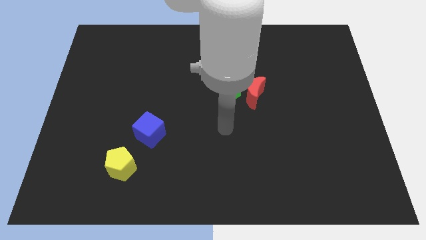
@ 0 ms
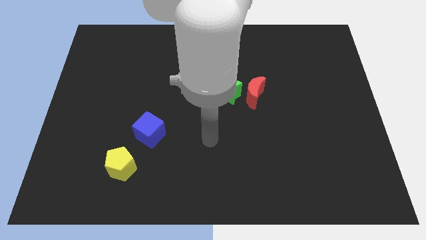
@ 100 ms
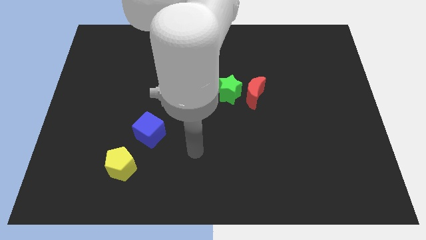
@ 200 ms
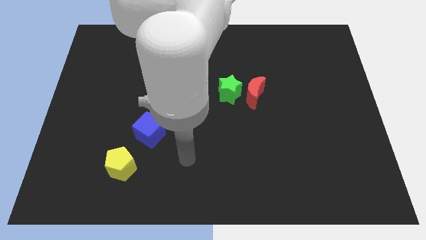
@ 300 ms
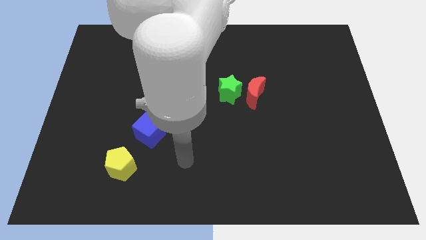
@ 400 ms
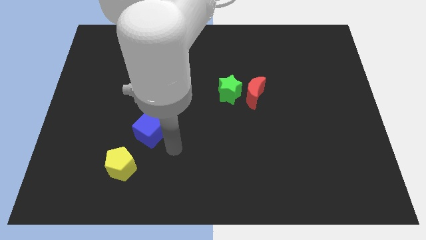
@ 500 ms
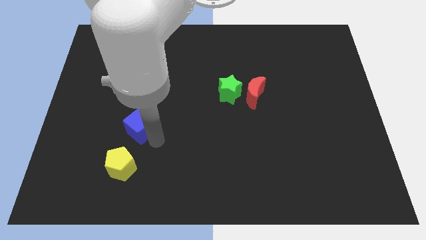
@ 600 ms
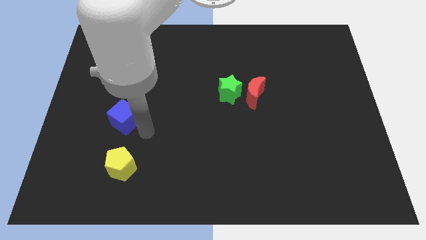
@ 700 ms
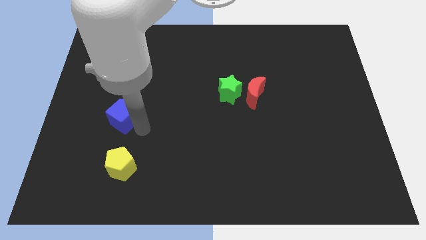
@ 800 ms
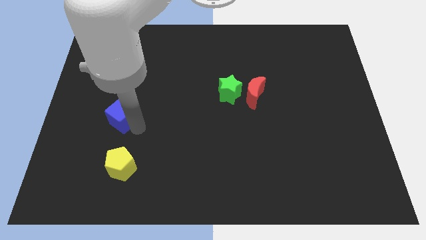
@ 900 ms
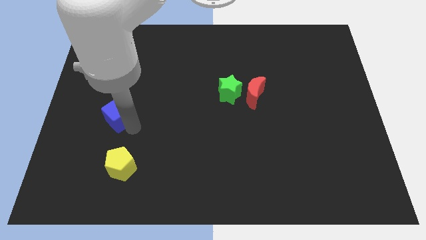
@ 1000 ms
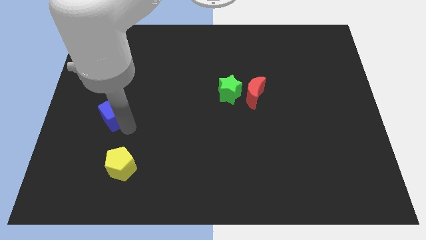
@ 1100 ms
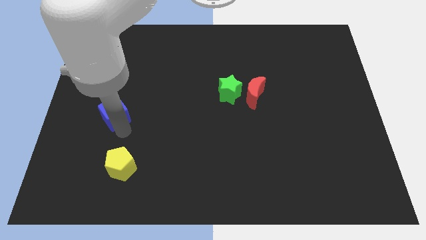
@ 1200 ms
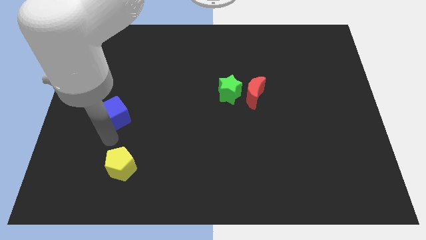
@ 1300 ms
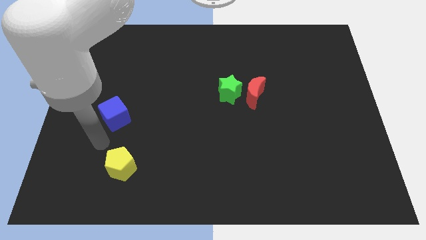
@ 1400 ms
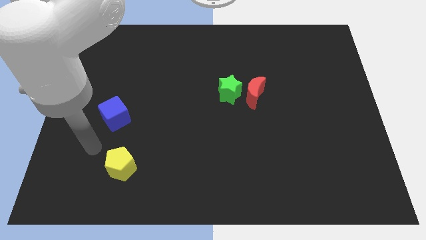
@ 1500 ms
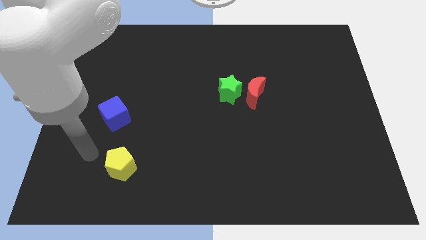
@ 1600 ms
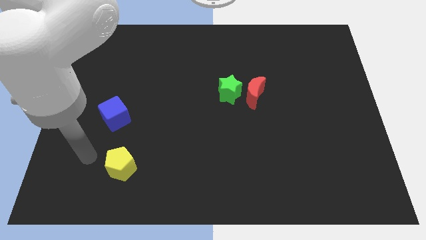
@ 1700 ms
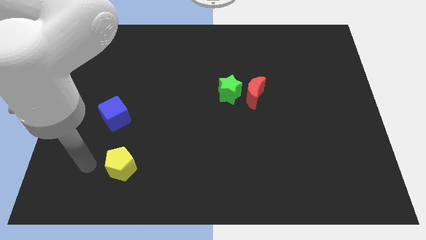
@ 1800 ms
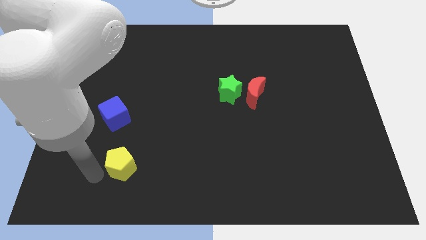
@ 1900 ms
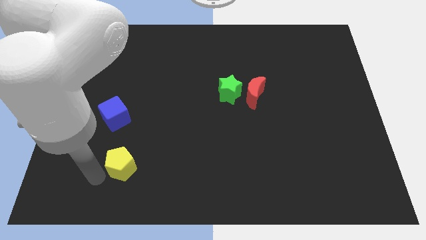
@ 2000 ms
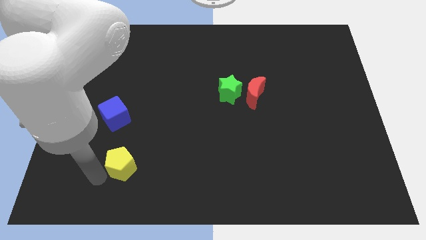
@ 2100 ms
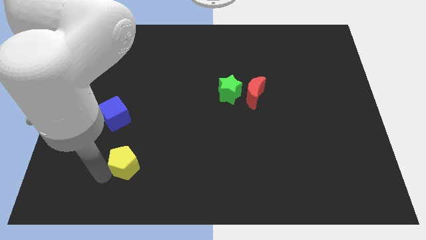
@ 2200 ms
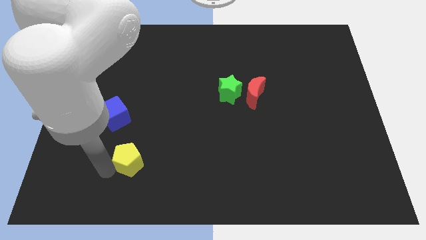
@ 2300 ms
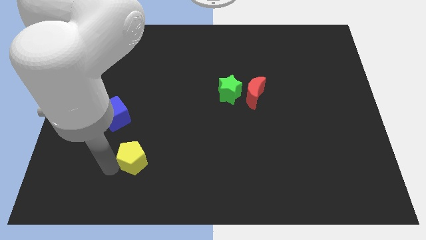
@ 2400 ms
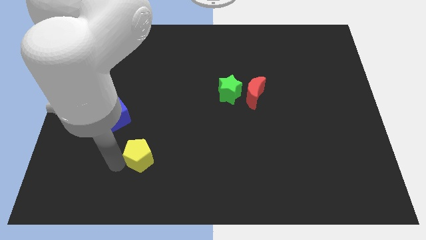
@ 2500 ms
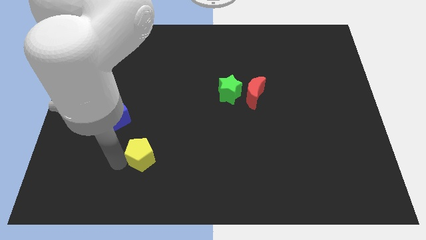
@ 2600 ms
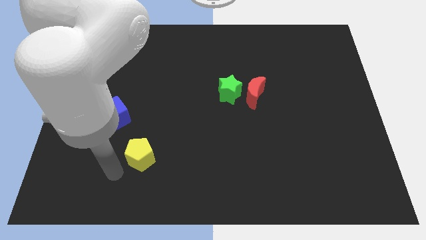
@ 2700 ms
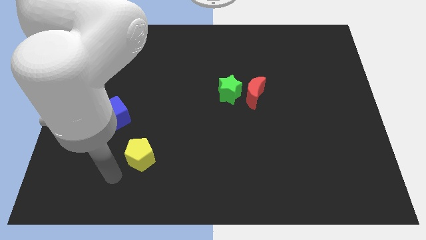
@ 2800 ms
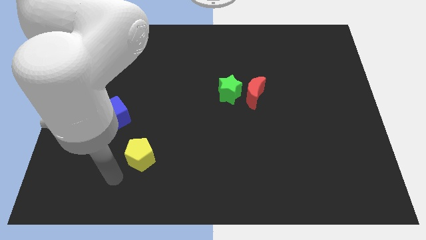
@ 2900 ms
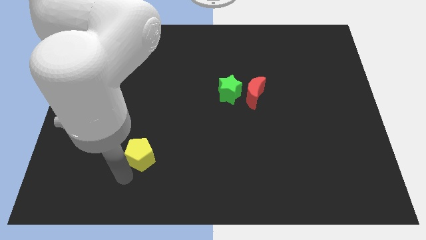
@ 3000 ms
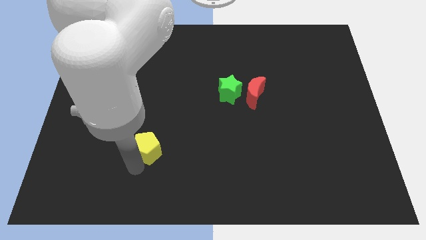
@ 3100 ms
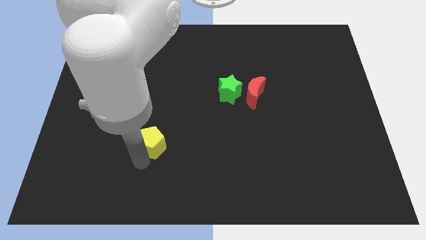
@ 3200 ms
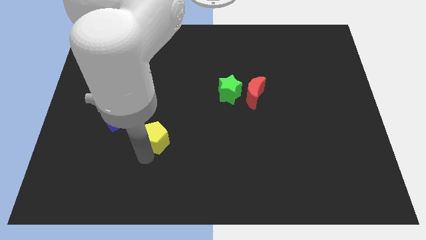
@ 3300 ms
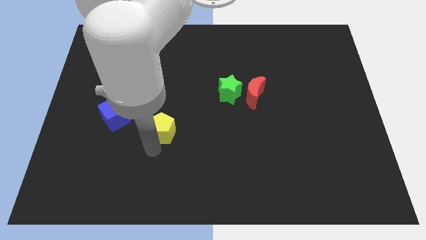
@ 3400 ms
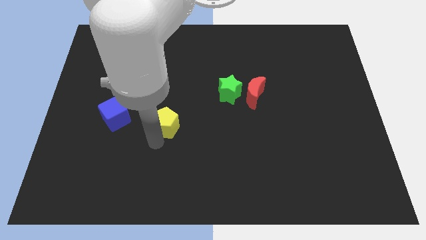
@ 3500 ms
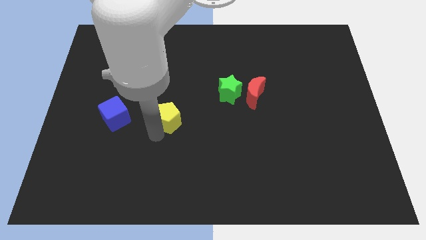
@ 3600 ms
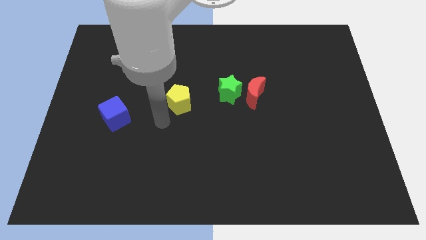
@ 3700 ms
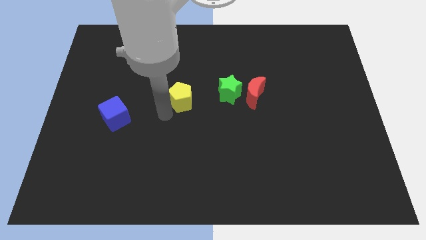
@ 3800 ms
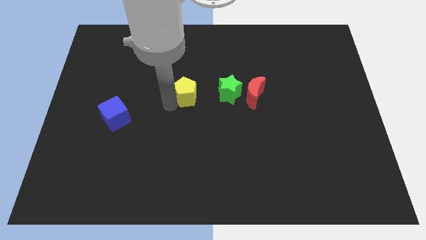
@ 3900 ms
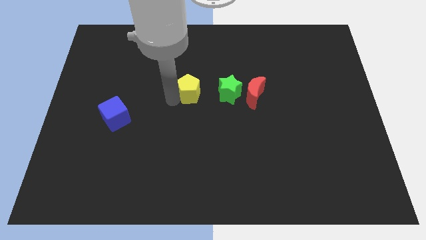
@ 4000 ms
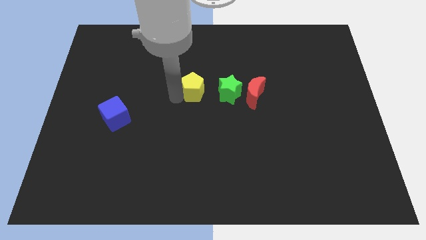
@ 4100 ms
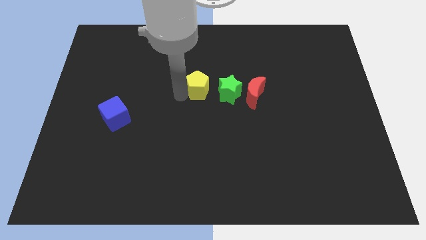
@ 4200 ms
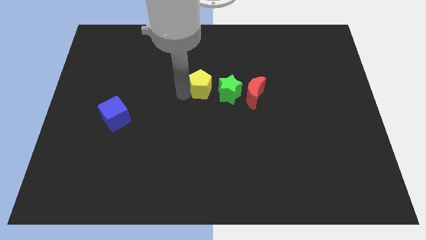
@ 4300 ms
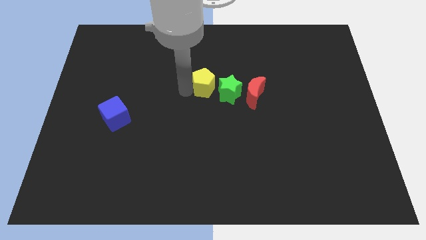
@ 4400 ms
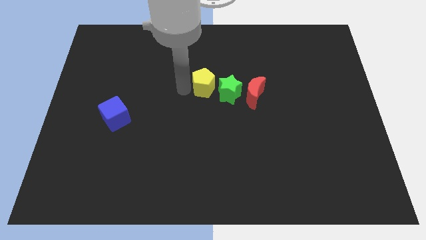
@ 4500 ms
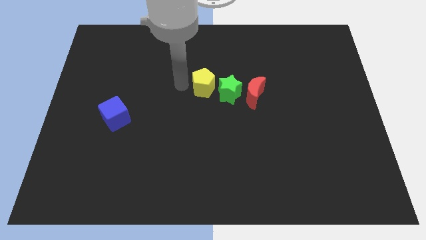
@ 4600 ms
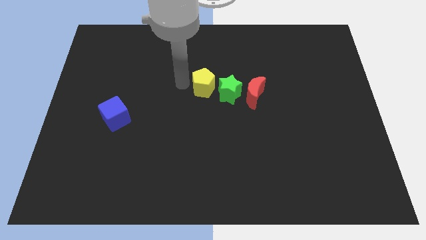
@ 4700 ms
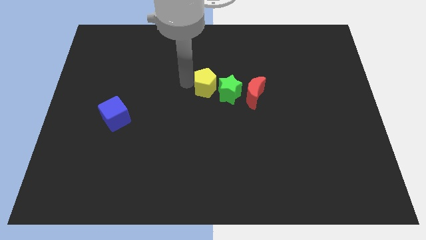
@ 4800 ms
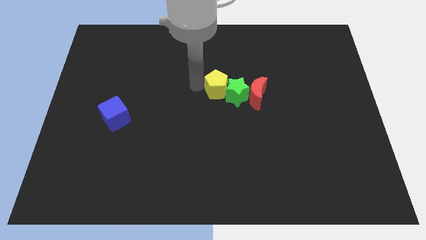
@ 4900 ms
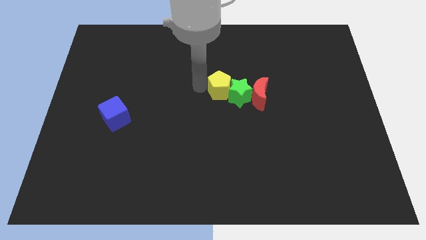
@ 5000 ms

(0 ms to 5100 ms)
push the yellow pentagon close to the star

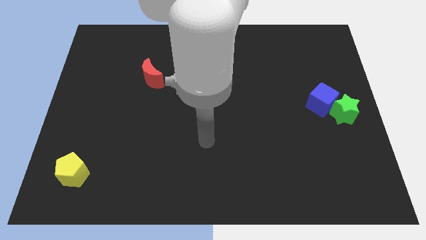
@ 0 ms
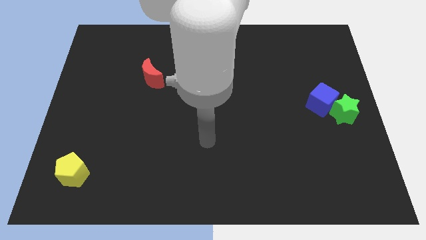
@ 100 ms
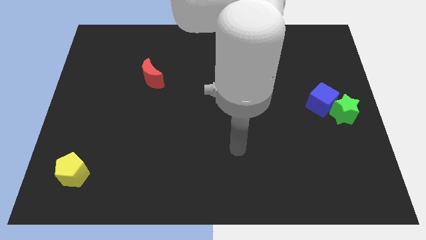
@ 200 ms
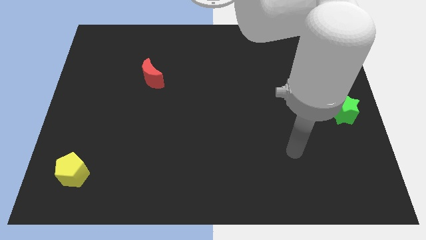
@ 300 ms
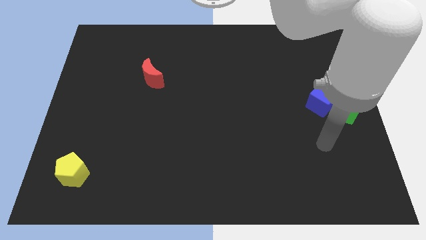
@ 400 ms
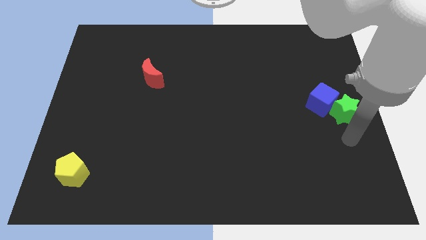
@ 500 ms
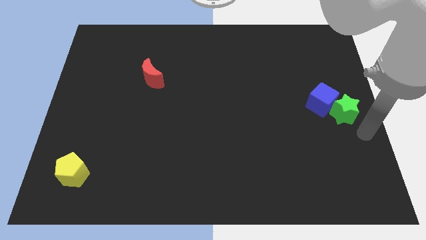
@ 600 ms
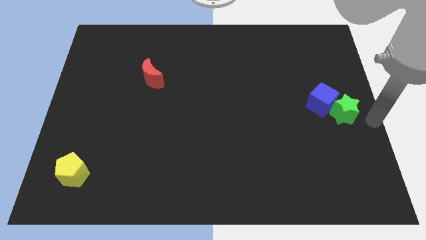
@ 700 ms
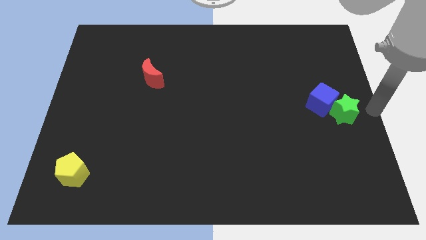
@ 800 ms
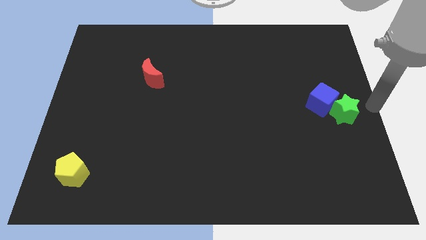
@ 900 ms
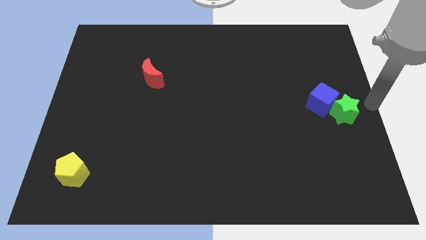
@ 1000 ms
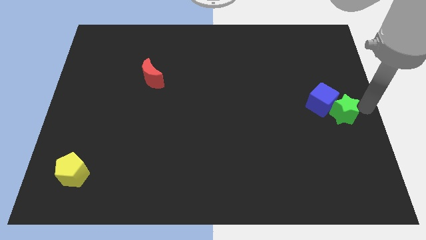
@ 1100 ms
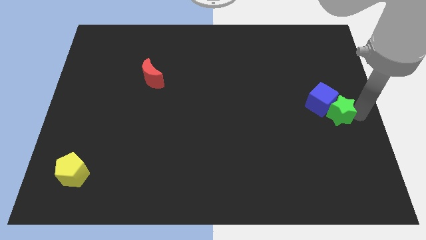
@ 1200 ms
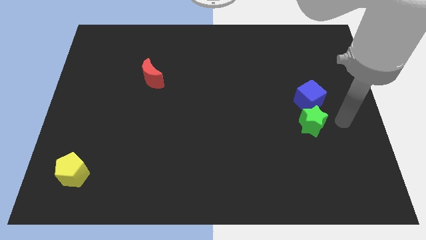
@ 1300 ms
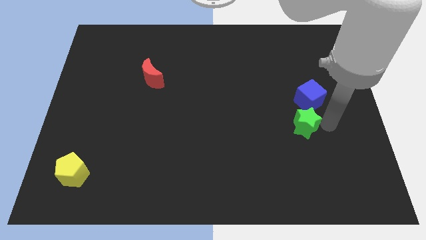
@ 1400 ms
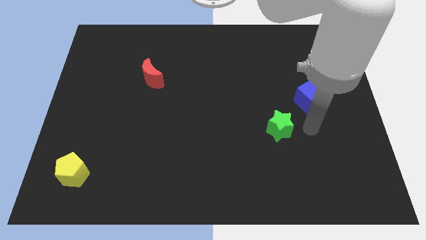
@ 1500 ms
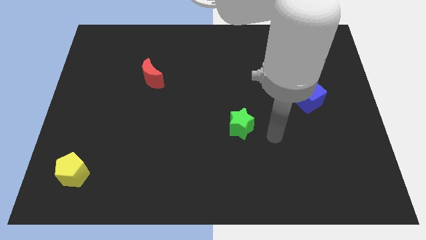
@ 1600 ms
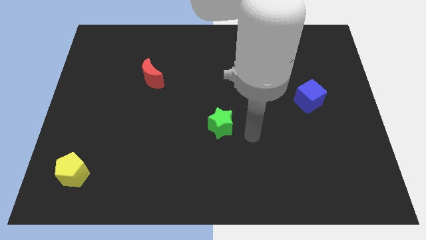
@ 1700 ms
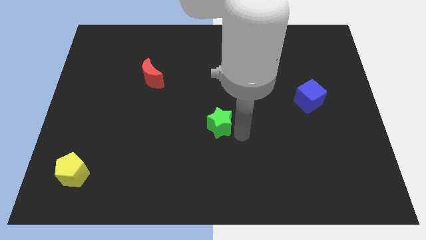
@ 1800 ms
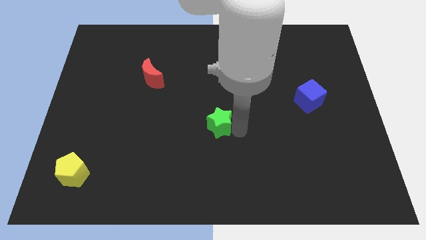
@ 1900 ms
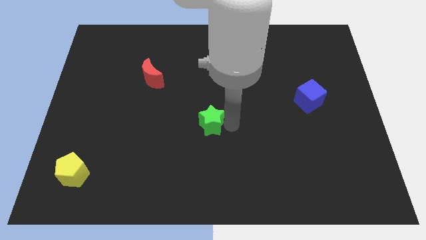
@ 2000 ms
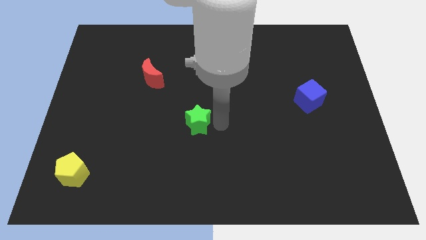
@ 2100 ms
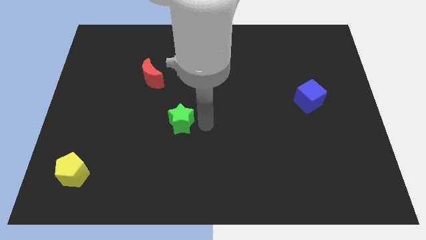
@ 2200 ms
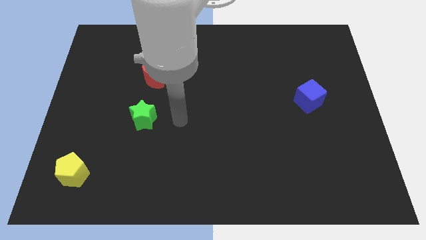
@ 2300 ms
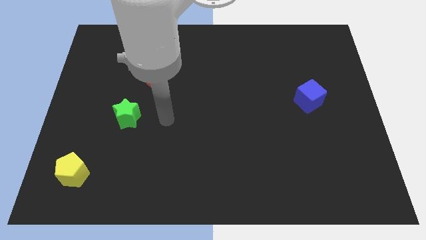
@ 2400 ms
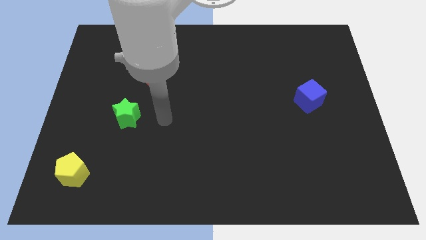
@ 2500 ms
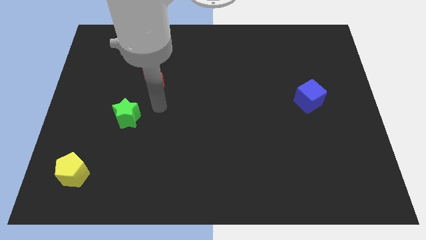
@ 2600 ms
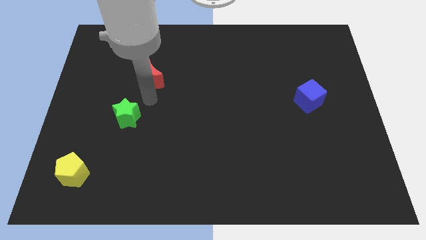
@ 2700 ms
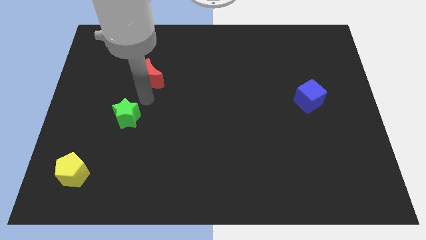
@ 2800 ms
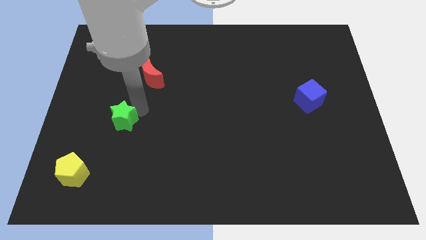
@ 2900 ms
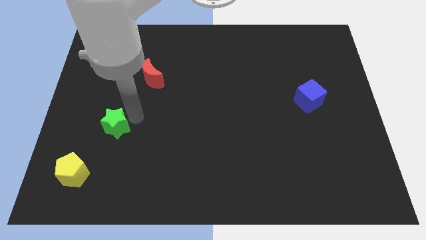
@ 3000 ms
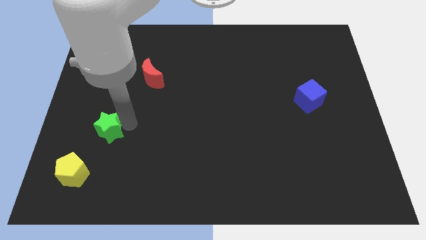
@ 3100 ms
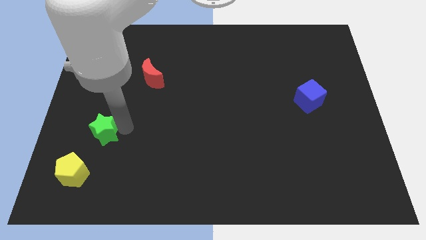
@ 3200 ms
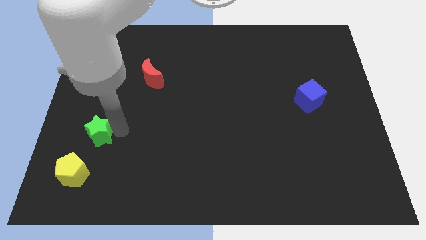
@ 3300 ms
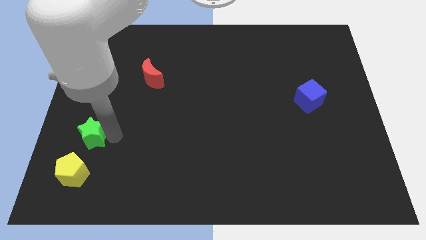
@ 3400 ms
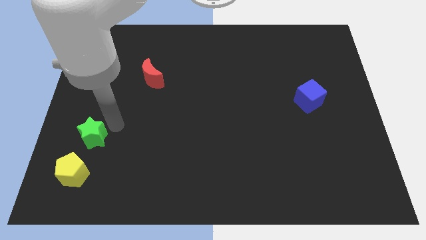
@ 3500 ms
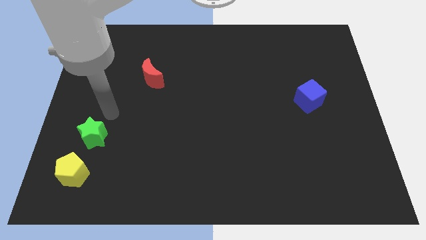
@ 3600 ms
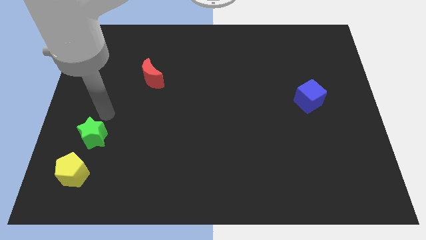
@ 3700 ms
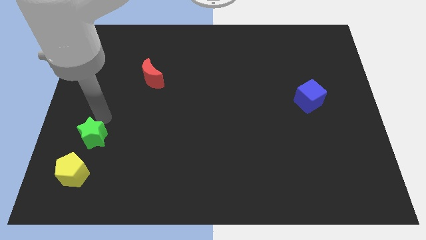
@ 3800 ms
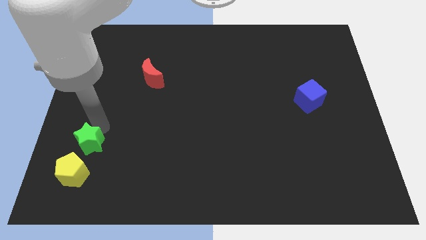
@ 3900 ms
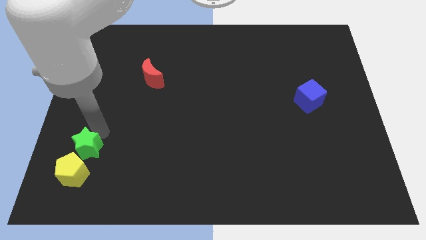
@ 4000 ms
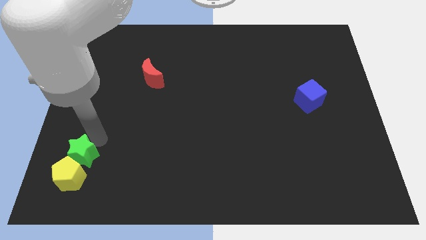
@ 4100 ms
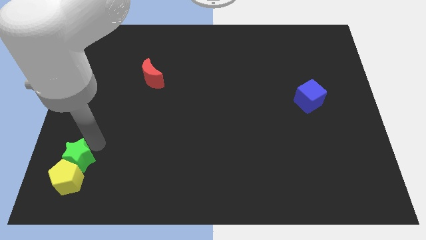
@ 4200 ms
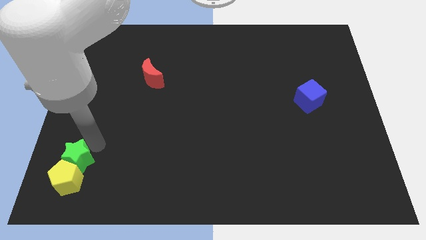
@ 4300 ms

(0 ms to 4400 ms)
slide the green block next to the yellow block
